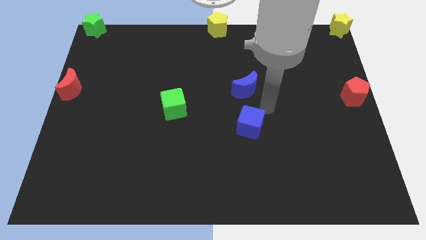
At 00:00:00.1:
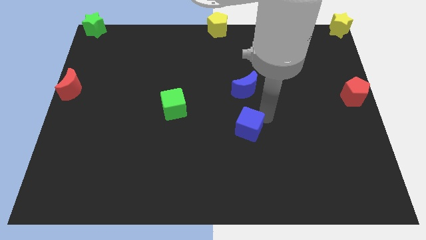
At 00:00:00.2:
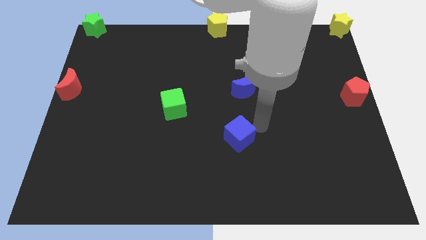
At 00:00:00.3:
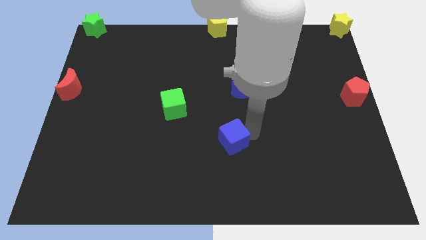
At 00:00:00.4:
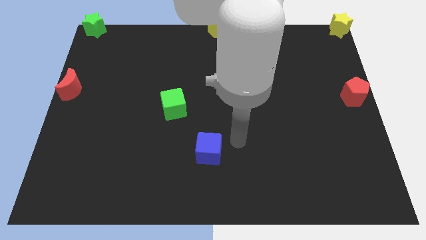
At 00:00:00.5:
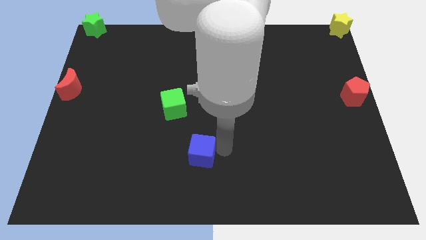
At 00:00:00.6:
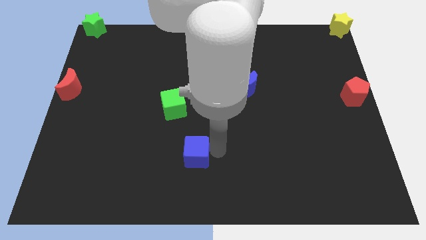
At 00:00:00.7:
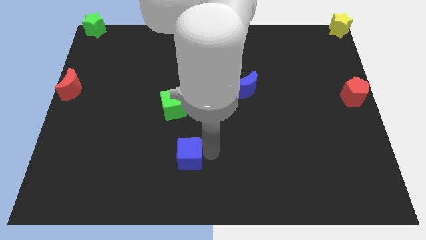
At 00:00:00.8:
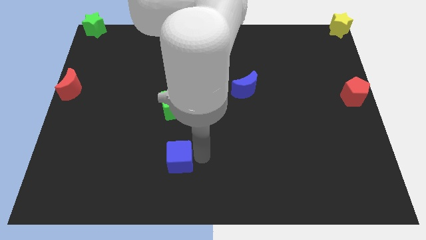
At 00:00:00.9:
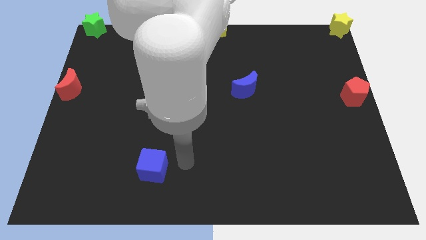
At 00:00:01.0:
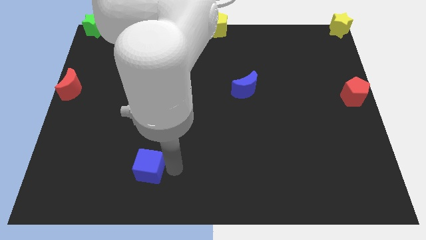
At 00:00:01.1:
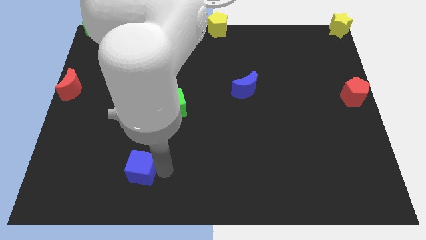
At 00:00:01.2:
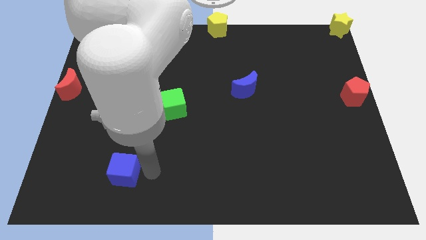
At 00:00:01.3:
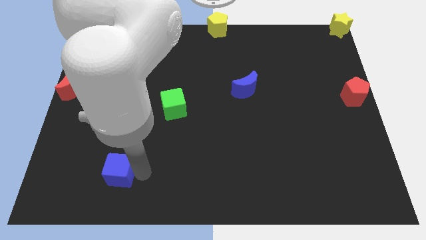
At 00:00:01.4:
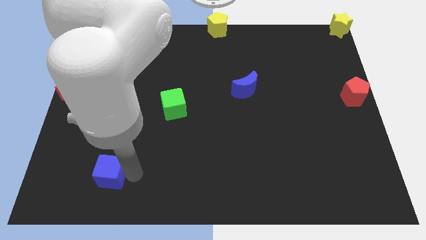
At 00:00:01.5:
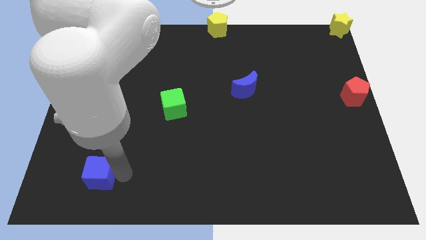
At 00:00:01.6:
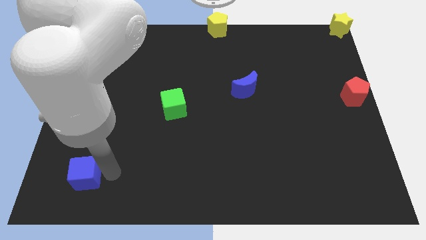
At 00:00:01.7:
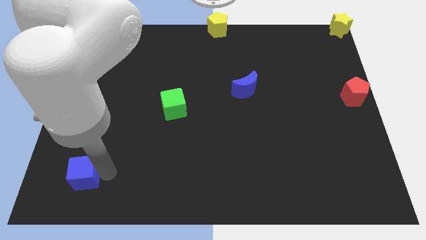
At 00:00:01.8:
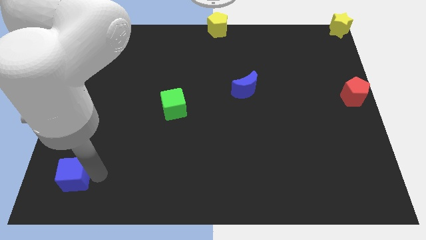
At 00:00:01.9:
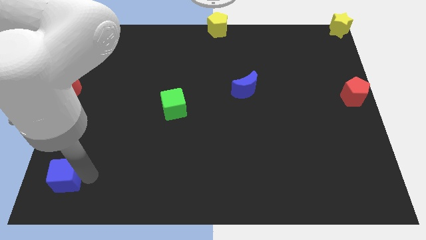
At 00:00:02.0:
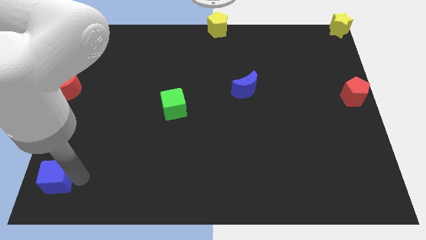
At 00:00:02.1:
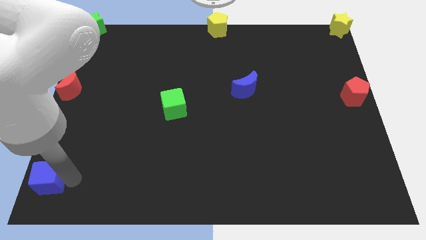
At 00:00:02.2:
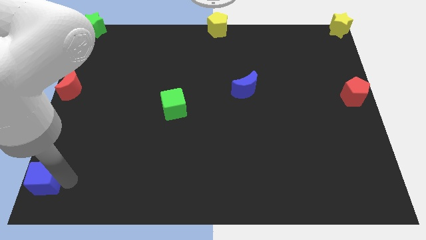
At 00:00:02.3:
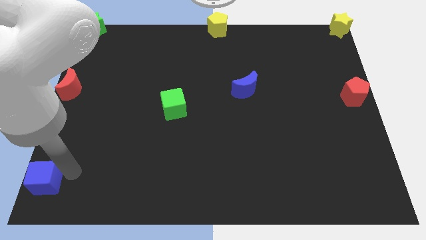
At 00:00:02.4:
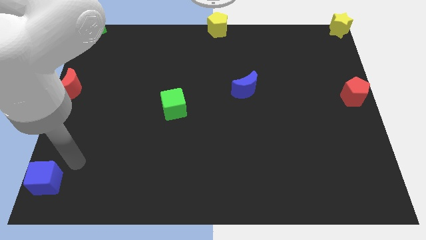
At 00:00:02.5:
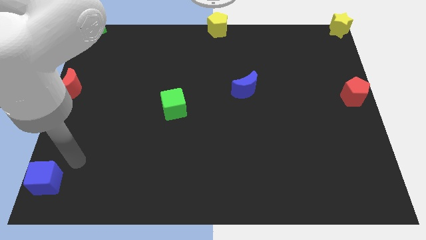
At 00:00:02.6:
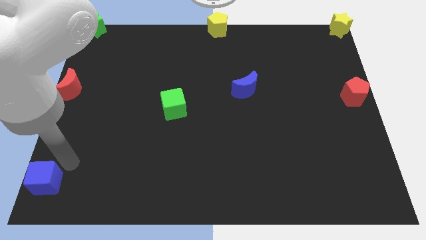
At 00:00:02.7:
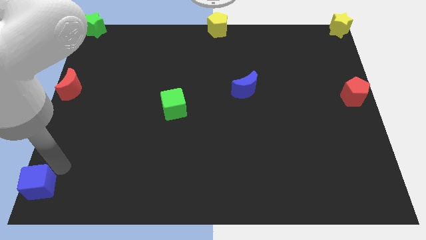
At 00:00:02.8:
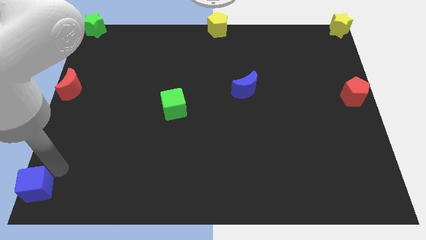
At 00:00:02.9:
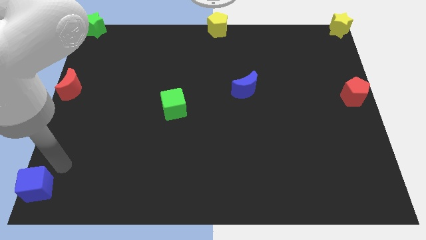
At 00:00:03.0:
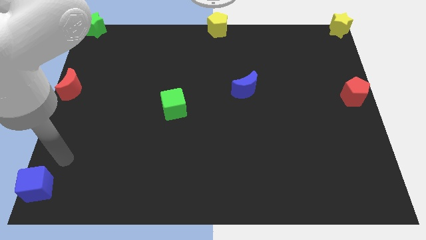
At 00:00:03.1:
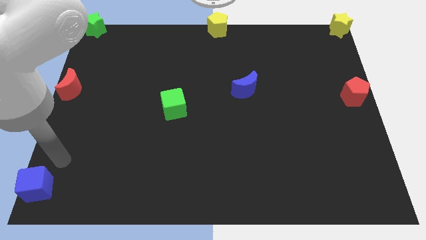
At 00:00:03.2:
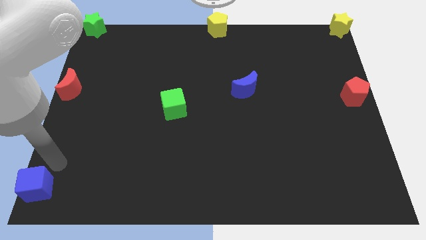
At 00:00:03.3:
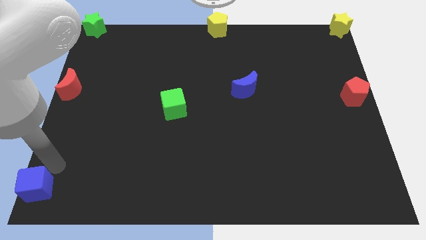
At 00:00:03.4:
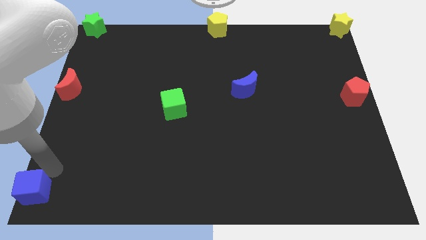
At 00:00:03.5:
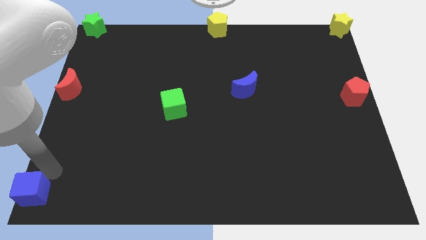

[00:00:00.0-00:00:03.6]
move the blue cube to the bottom left of the board

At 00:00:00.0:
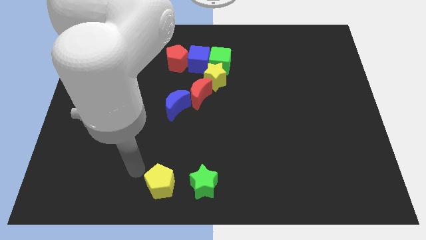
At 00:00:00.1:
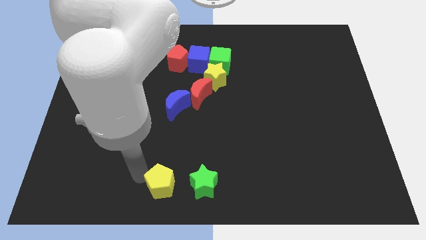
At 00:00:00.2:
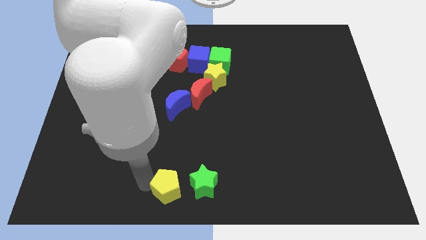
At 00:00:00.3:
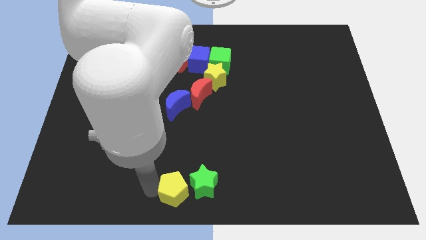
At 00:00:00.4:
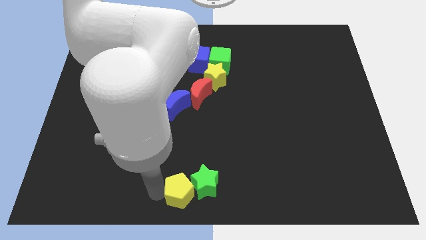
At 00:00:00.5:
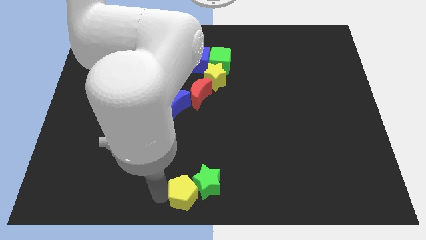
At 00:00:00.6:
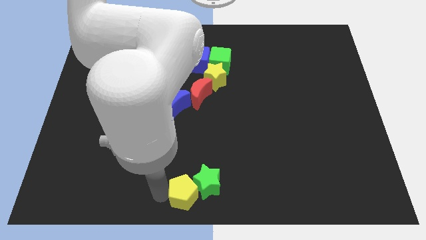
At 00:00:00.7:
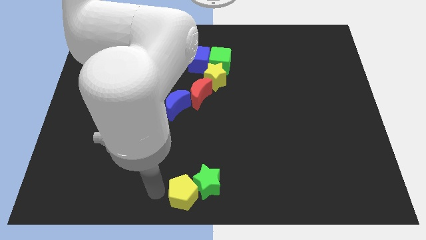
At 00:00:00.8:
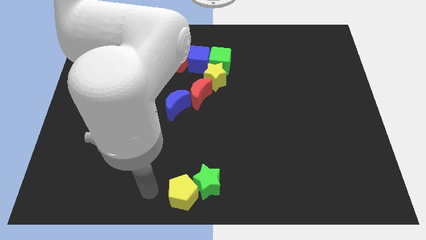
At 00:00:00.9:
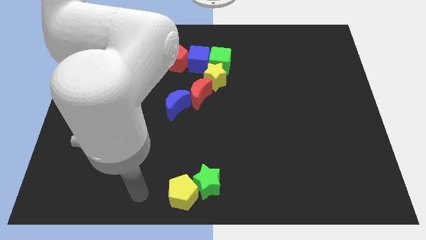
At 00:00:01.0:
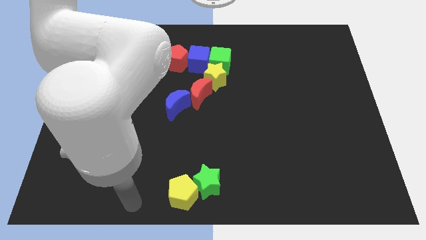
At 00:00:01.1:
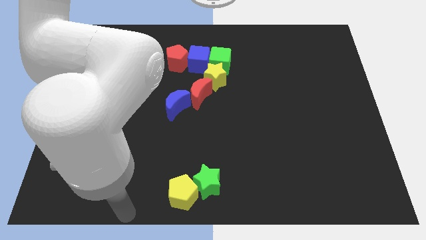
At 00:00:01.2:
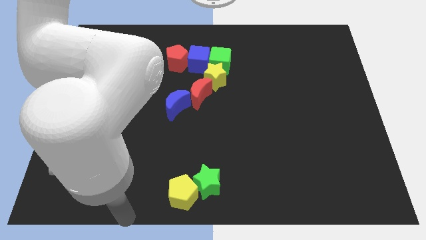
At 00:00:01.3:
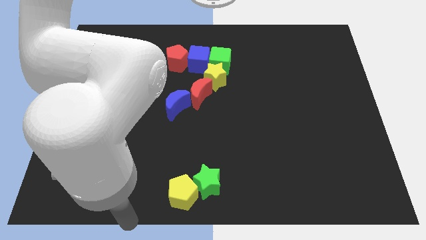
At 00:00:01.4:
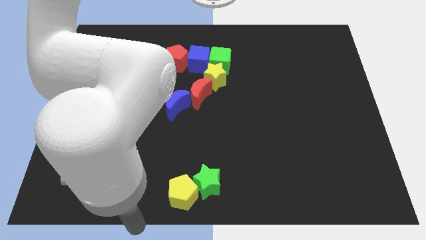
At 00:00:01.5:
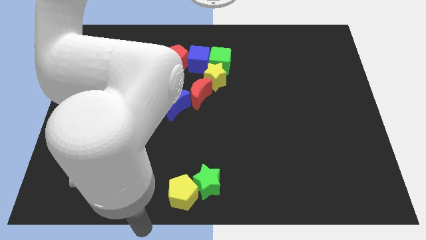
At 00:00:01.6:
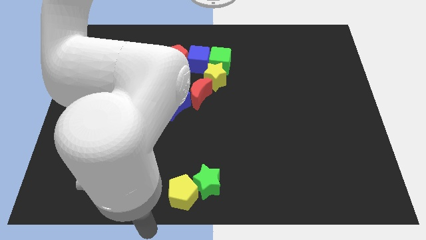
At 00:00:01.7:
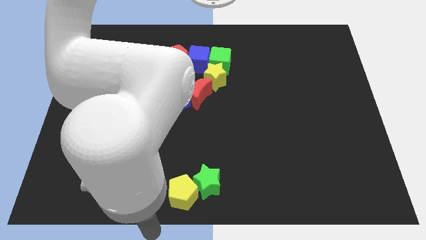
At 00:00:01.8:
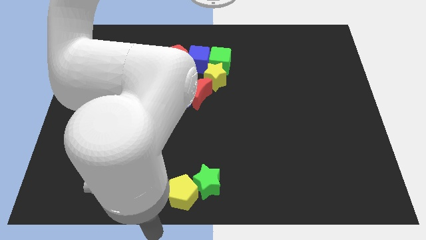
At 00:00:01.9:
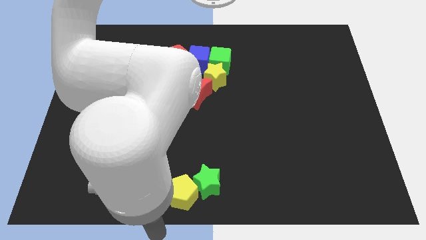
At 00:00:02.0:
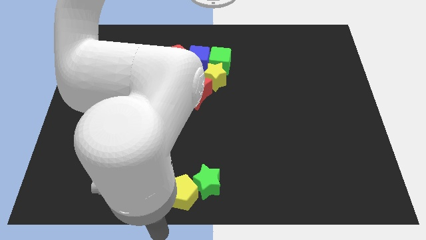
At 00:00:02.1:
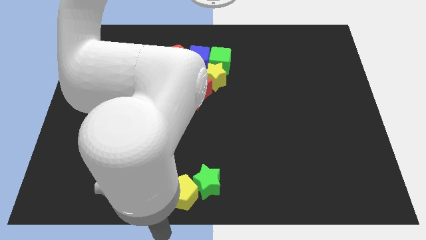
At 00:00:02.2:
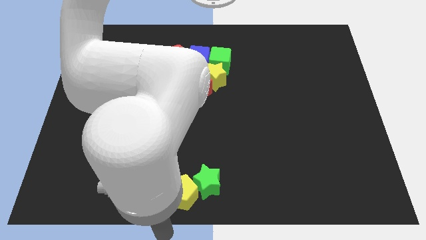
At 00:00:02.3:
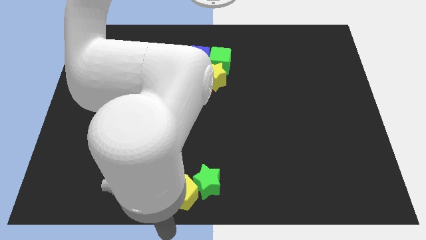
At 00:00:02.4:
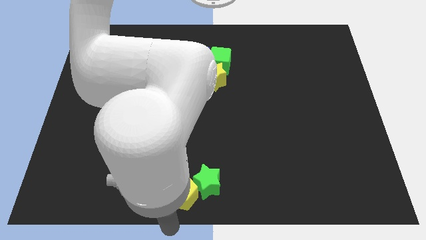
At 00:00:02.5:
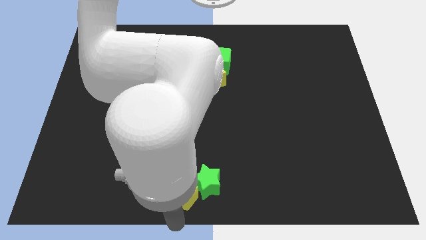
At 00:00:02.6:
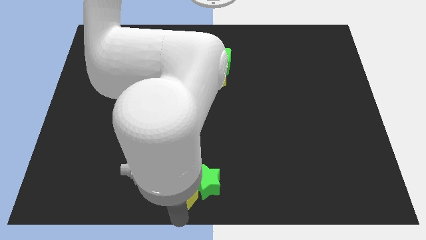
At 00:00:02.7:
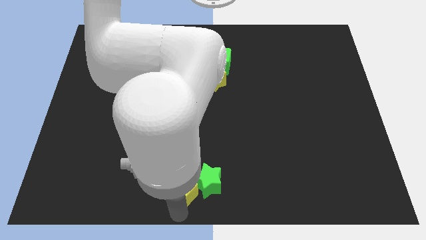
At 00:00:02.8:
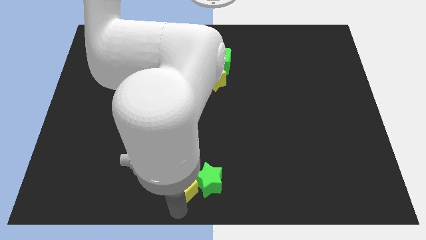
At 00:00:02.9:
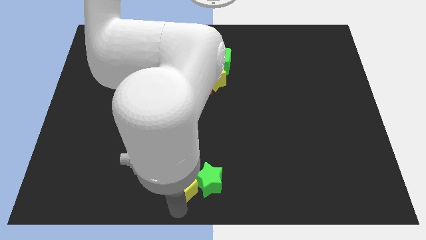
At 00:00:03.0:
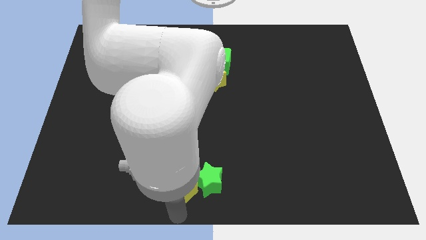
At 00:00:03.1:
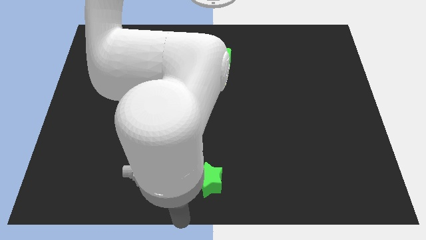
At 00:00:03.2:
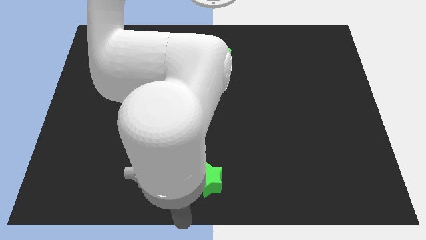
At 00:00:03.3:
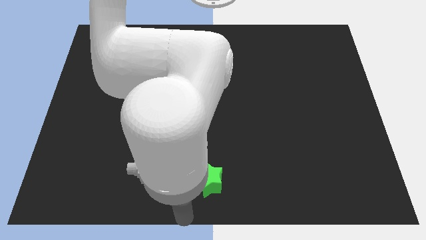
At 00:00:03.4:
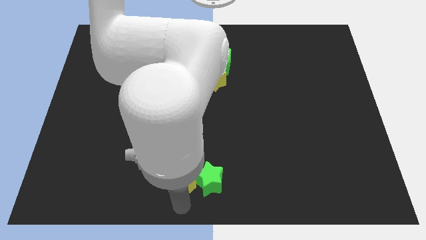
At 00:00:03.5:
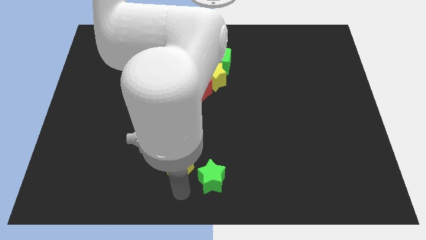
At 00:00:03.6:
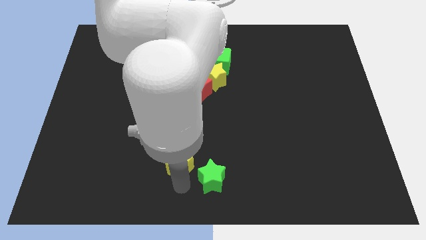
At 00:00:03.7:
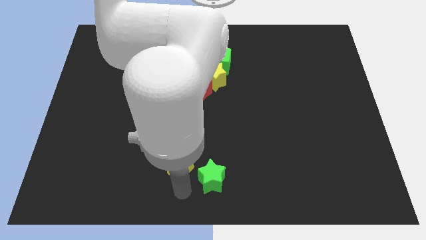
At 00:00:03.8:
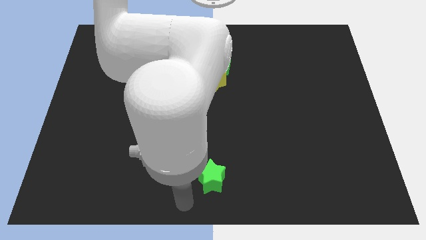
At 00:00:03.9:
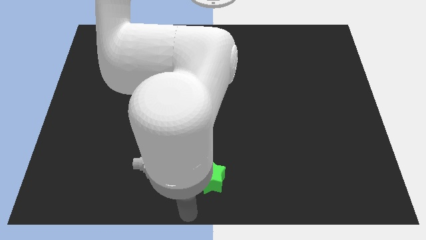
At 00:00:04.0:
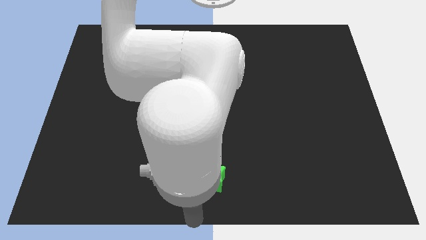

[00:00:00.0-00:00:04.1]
push the yellow pentagon to the left of the green star

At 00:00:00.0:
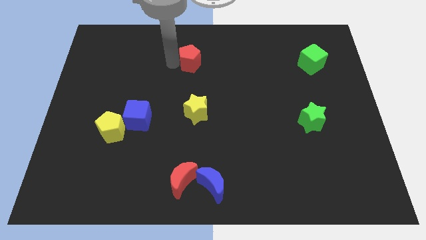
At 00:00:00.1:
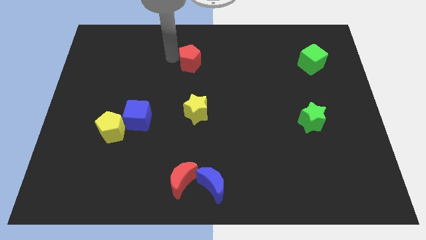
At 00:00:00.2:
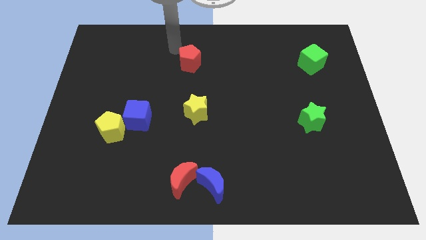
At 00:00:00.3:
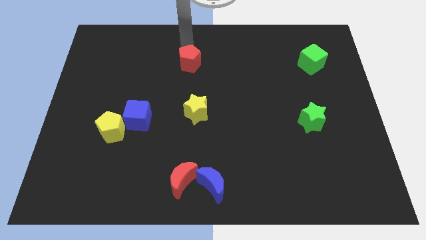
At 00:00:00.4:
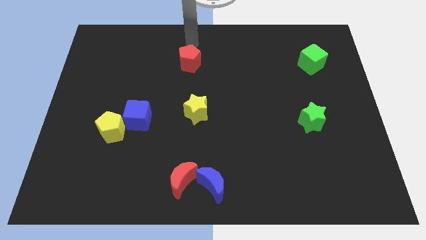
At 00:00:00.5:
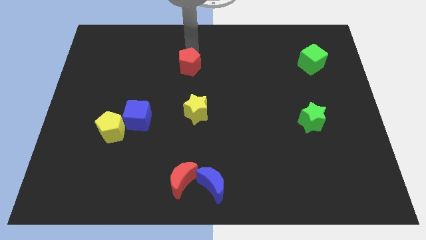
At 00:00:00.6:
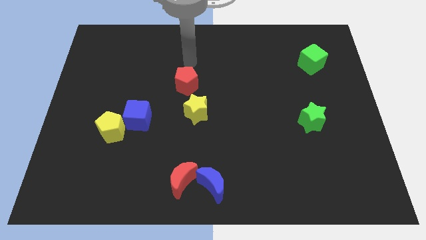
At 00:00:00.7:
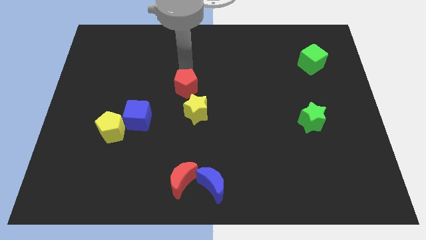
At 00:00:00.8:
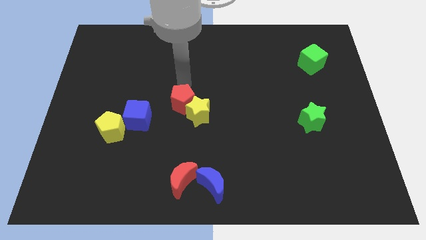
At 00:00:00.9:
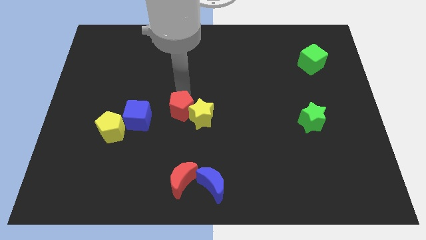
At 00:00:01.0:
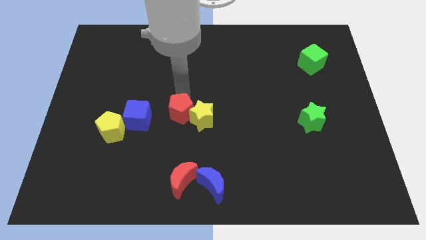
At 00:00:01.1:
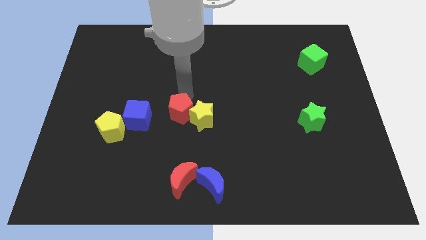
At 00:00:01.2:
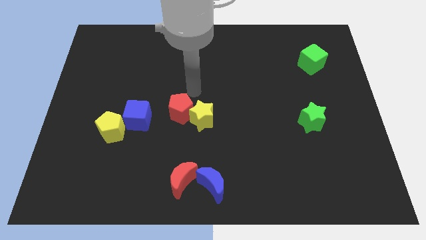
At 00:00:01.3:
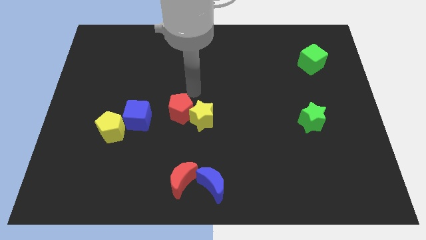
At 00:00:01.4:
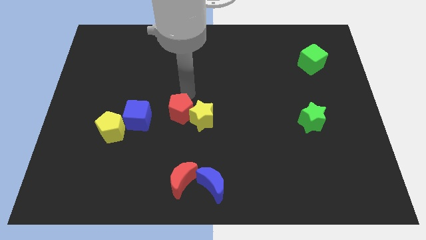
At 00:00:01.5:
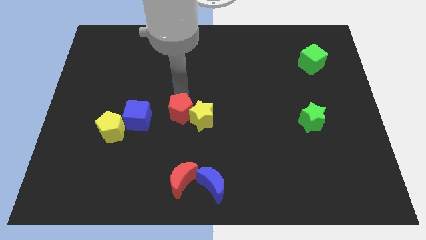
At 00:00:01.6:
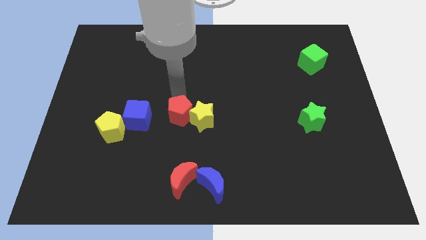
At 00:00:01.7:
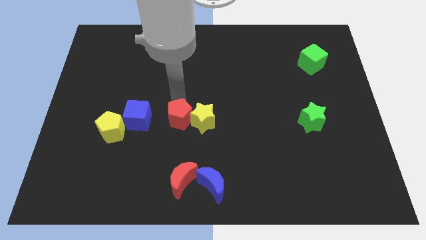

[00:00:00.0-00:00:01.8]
push the red pentagon into the left of the yellow star
